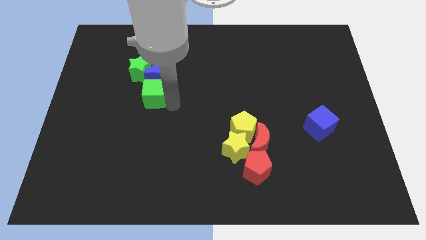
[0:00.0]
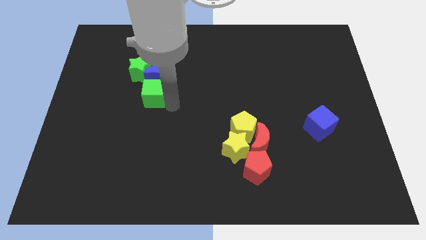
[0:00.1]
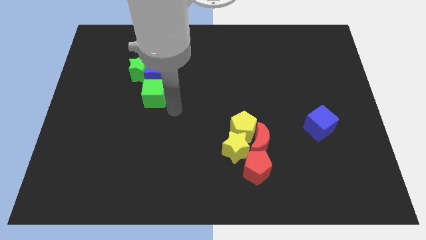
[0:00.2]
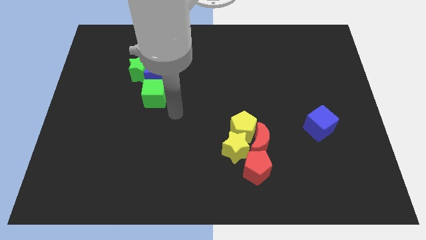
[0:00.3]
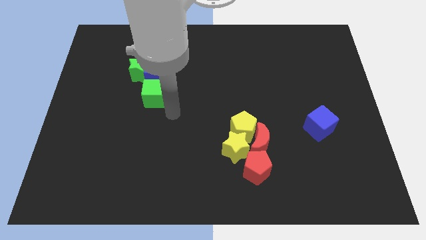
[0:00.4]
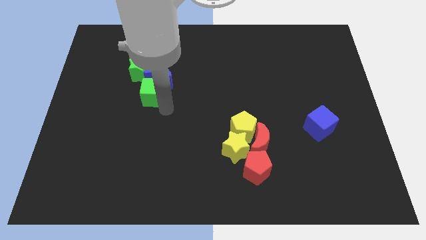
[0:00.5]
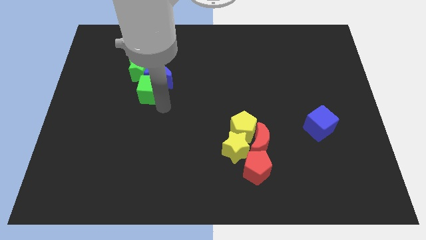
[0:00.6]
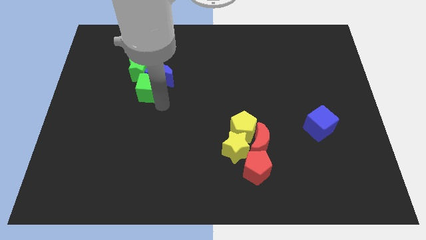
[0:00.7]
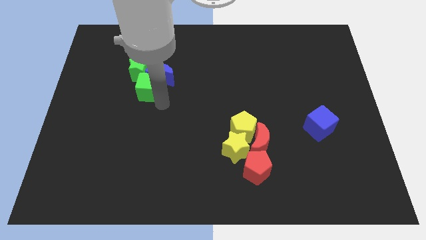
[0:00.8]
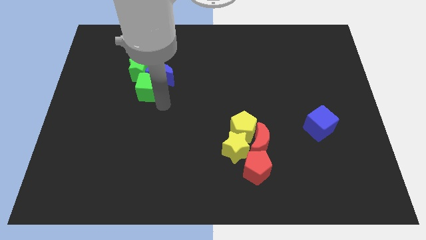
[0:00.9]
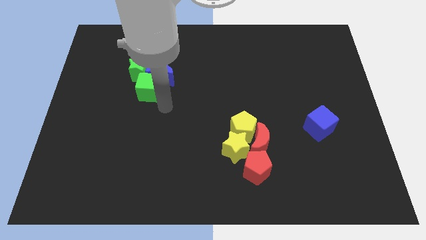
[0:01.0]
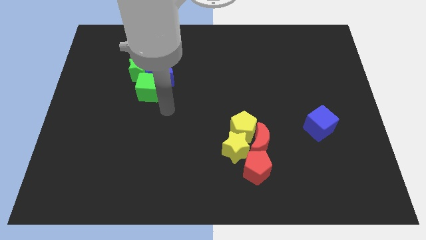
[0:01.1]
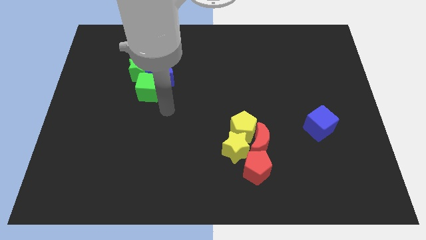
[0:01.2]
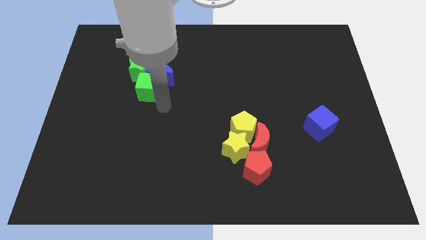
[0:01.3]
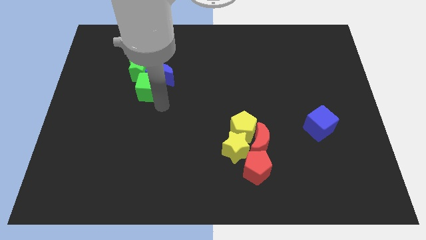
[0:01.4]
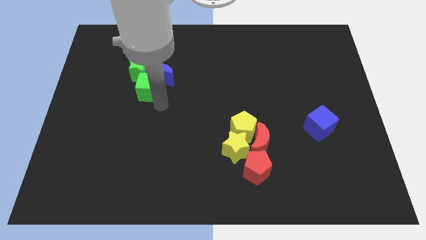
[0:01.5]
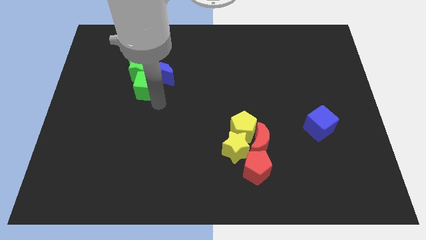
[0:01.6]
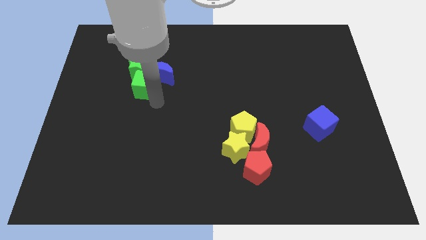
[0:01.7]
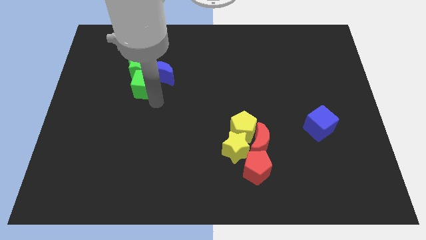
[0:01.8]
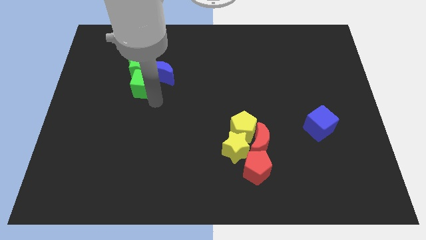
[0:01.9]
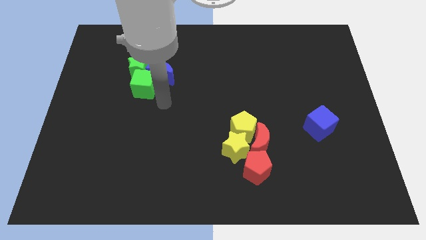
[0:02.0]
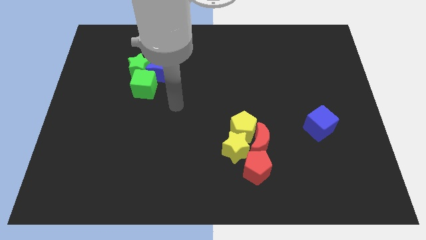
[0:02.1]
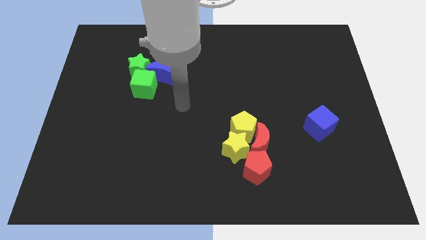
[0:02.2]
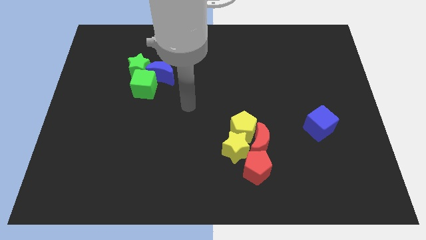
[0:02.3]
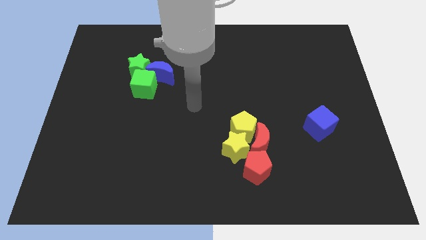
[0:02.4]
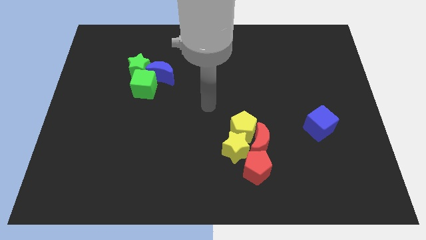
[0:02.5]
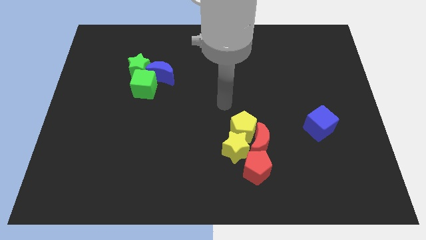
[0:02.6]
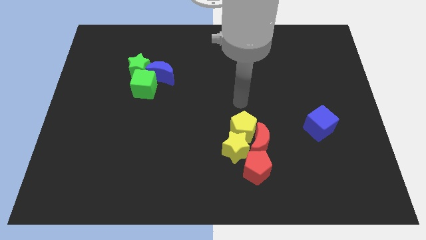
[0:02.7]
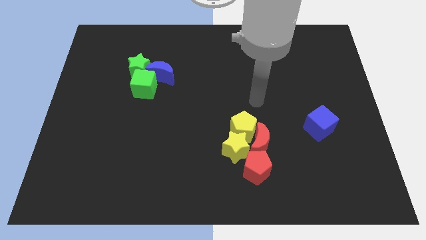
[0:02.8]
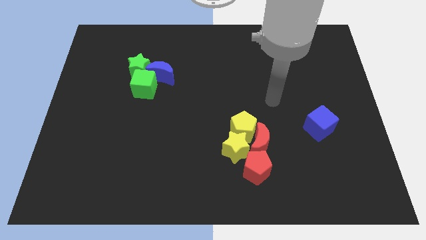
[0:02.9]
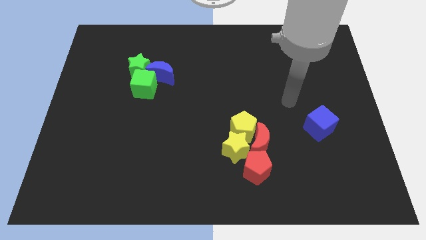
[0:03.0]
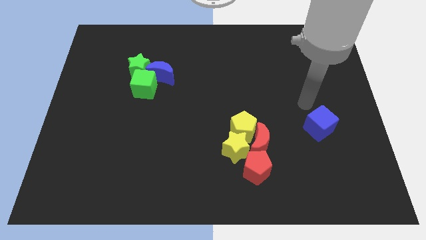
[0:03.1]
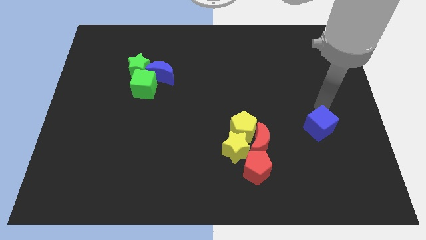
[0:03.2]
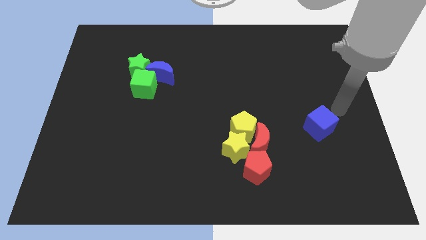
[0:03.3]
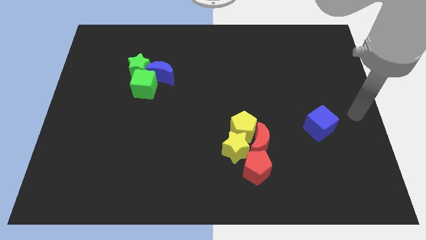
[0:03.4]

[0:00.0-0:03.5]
move the green cube slightly close to the blue moon and green star

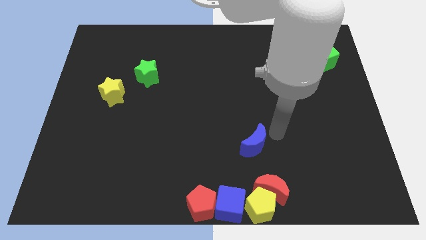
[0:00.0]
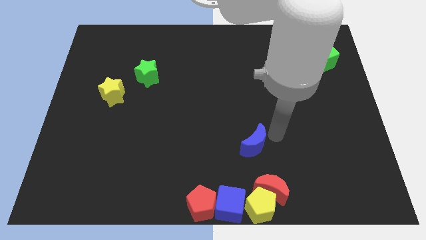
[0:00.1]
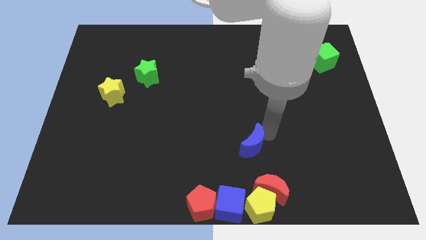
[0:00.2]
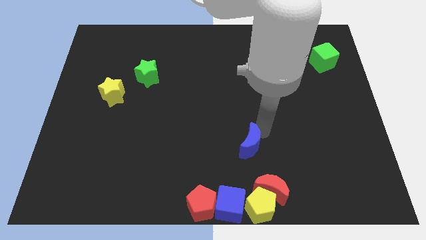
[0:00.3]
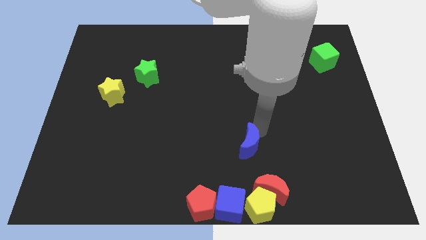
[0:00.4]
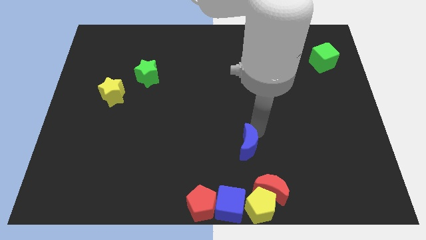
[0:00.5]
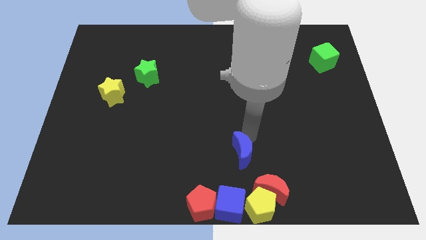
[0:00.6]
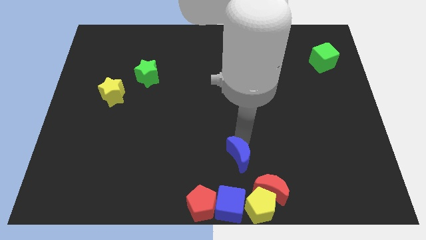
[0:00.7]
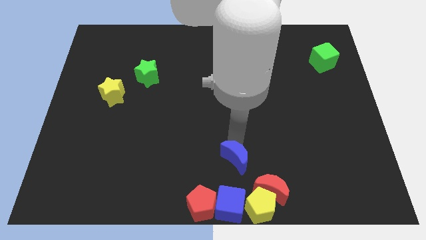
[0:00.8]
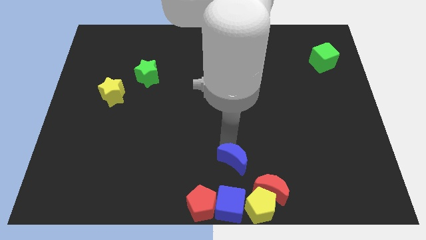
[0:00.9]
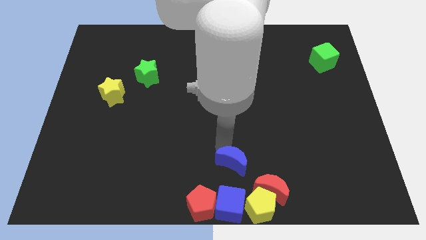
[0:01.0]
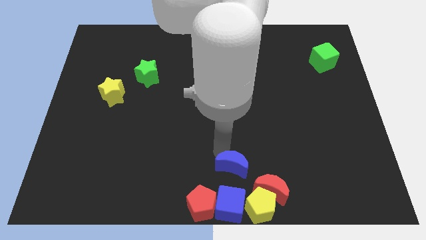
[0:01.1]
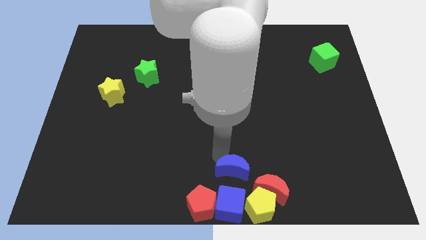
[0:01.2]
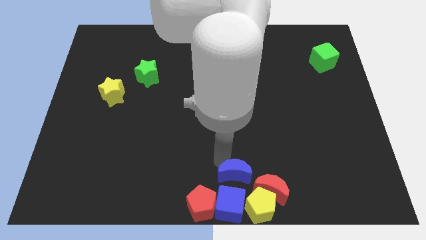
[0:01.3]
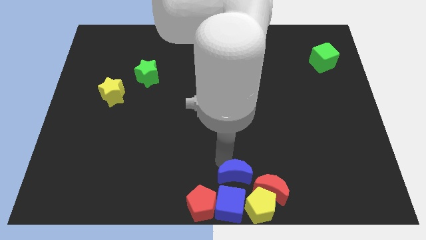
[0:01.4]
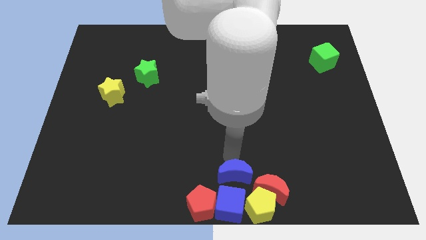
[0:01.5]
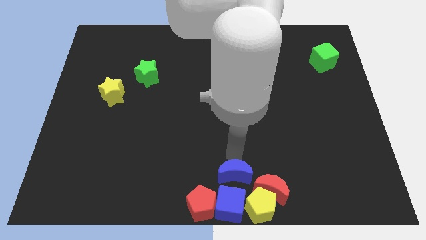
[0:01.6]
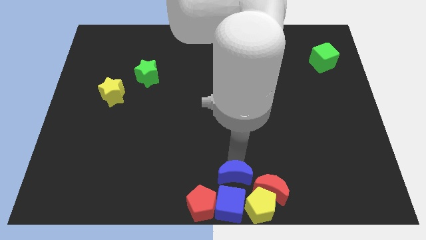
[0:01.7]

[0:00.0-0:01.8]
place the blue moon above the blue cube

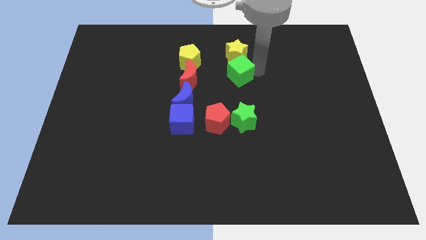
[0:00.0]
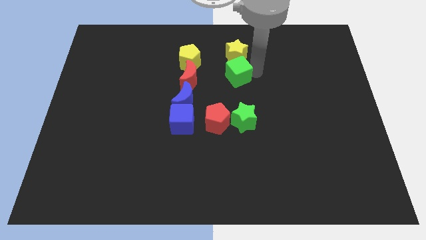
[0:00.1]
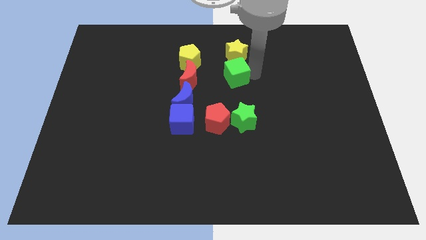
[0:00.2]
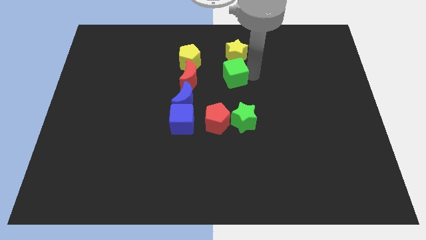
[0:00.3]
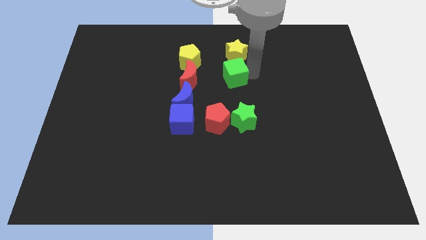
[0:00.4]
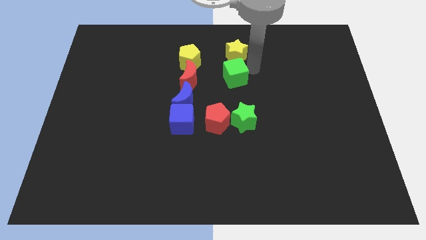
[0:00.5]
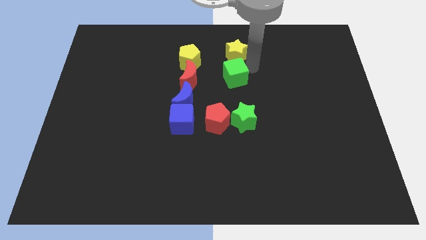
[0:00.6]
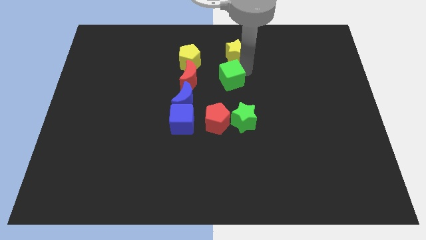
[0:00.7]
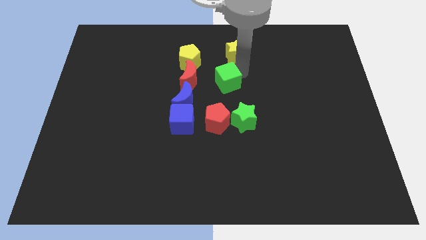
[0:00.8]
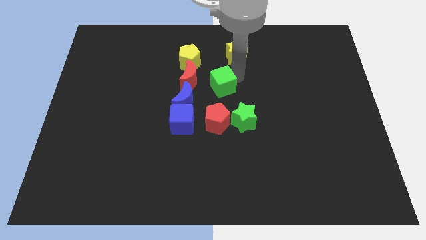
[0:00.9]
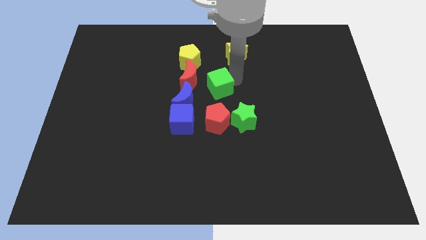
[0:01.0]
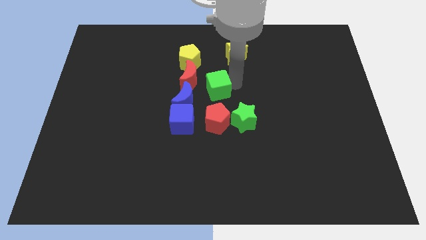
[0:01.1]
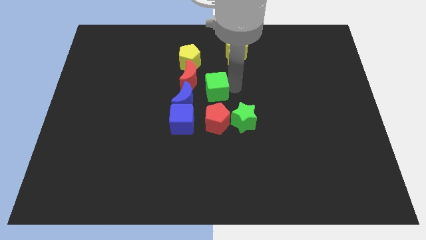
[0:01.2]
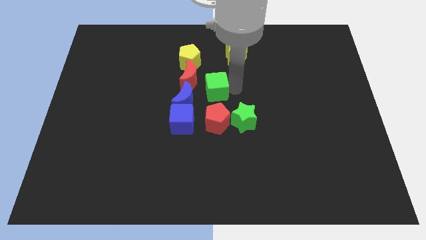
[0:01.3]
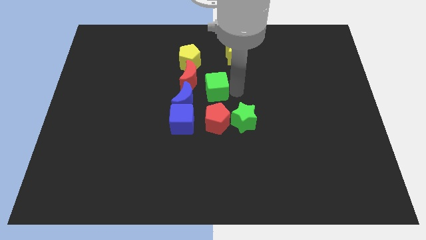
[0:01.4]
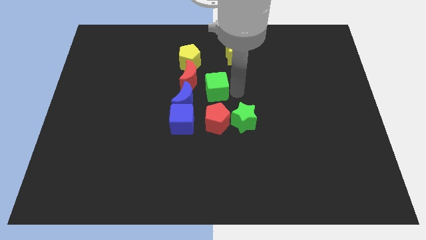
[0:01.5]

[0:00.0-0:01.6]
place the green cube above the red pentagon

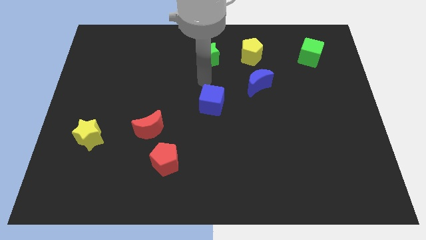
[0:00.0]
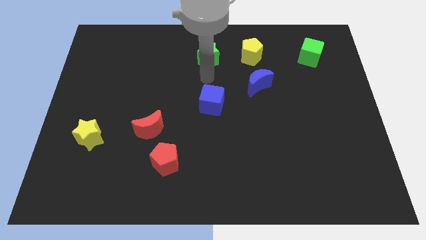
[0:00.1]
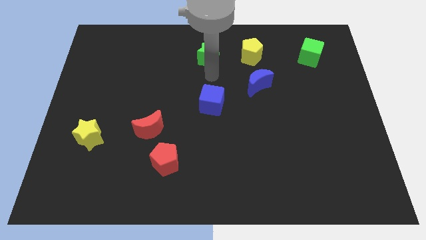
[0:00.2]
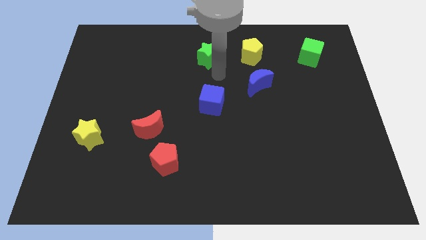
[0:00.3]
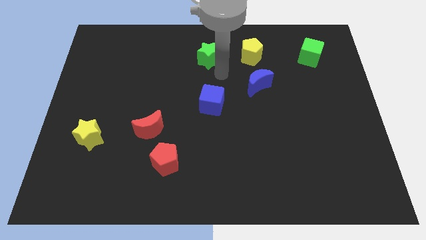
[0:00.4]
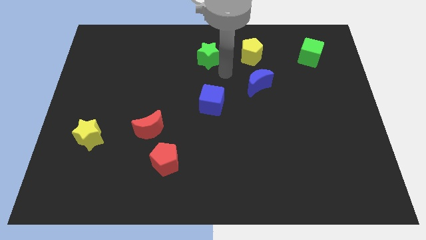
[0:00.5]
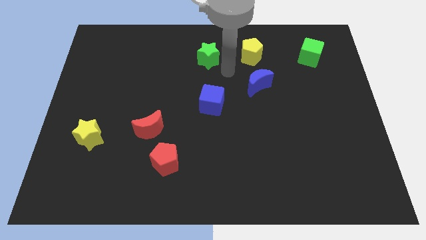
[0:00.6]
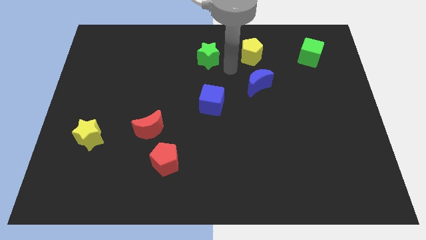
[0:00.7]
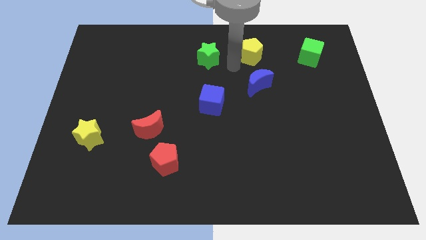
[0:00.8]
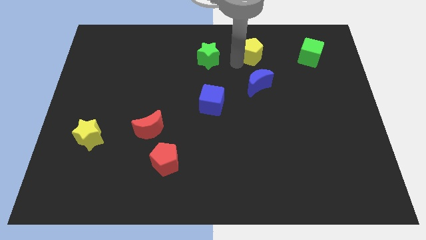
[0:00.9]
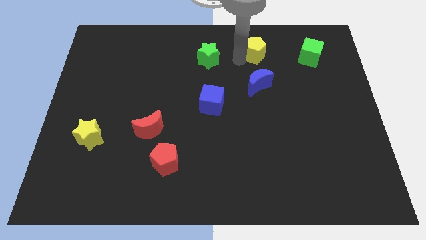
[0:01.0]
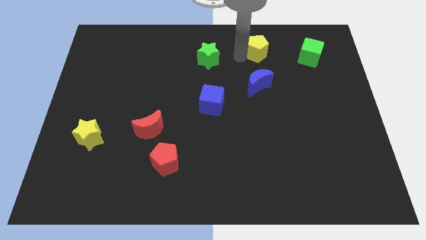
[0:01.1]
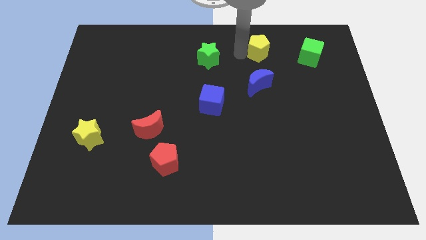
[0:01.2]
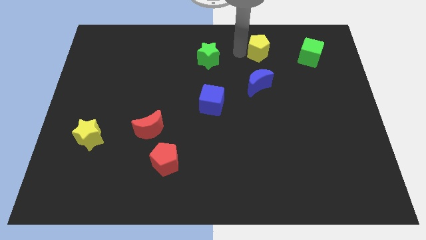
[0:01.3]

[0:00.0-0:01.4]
push the yellow pentagon slightly upwards

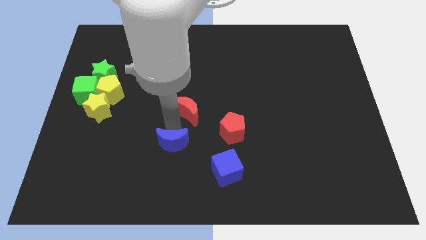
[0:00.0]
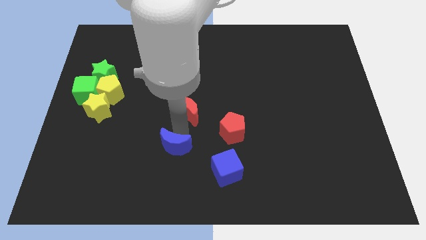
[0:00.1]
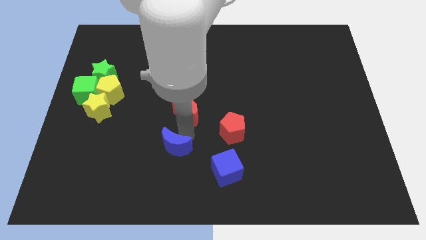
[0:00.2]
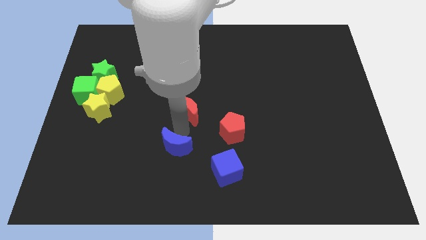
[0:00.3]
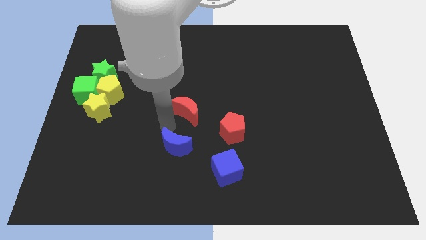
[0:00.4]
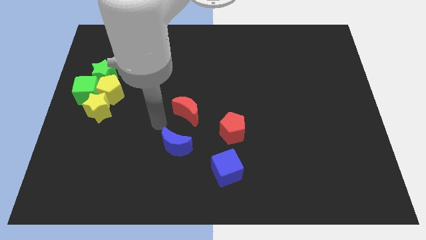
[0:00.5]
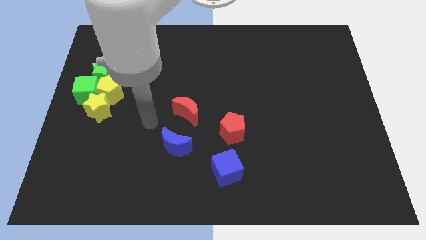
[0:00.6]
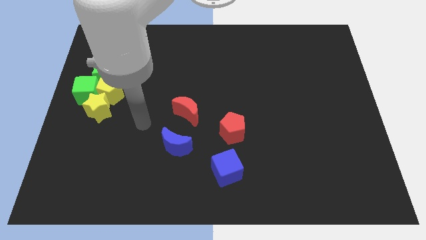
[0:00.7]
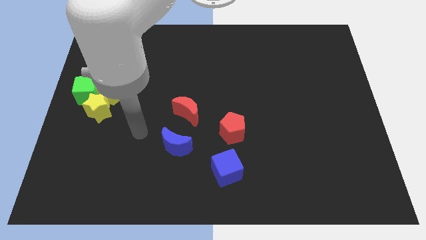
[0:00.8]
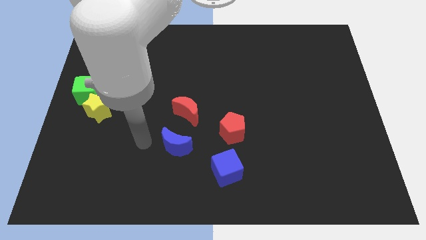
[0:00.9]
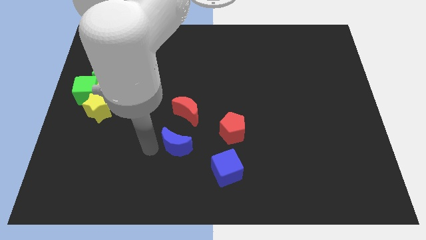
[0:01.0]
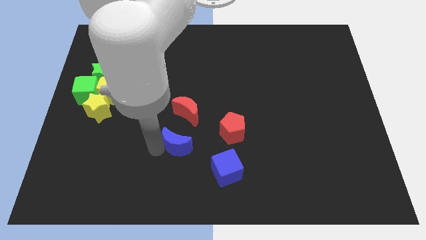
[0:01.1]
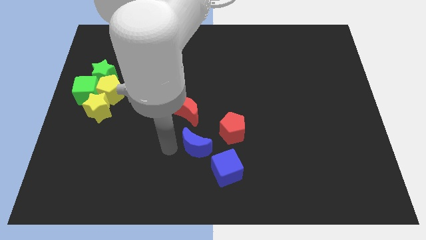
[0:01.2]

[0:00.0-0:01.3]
drag the blue moon diagonally bottom right to the red moon
